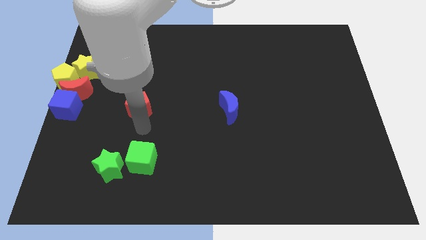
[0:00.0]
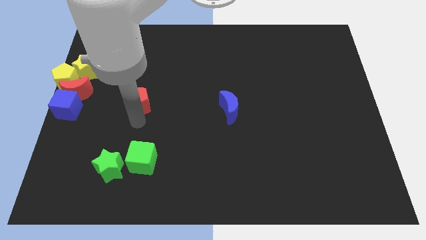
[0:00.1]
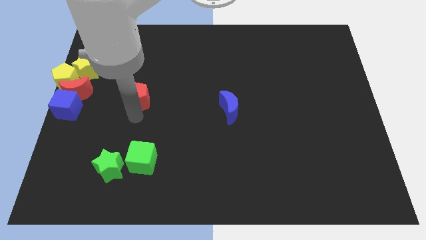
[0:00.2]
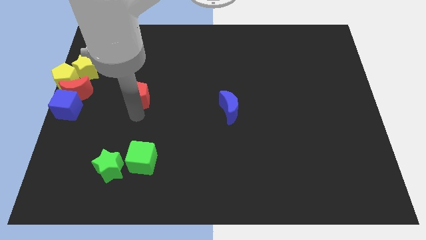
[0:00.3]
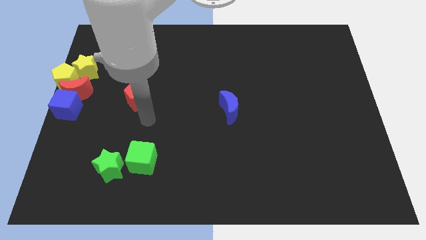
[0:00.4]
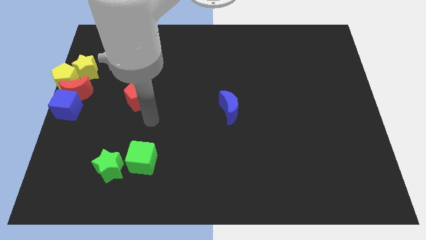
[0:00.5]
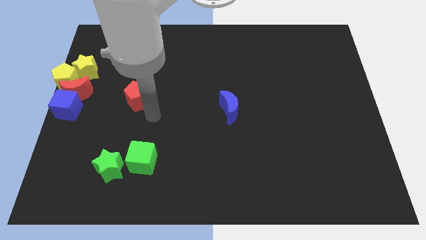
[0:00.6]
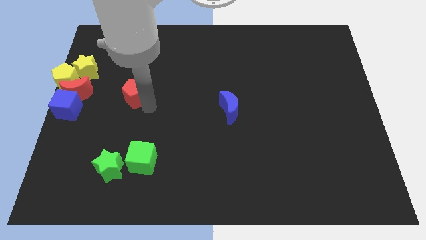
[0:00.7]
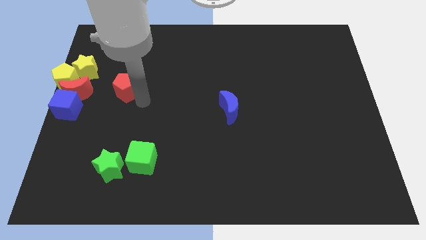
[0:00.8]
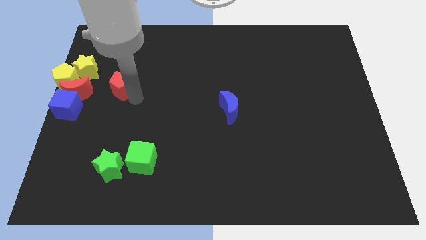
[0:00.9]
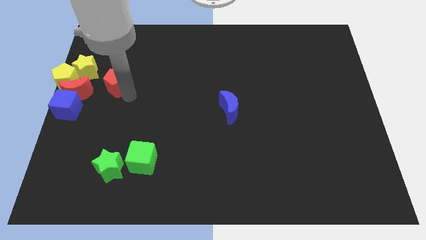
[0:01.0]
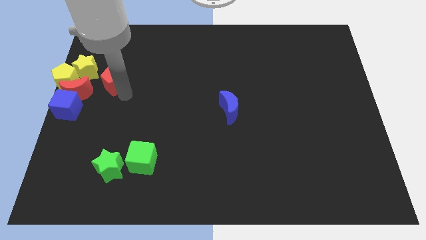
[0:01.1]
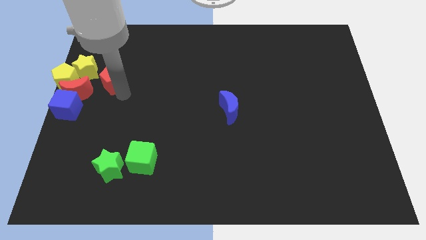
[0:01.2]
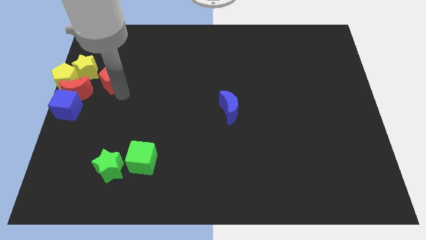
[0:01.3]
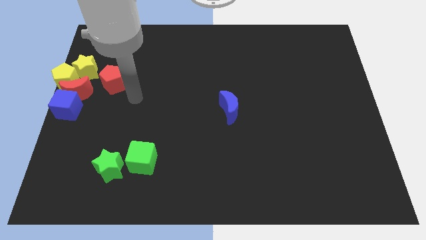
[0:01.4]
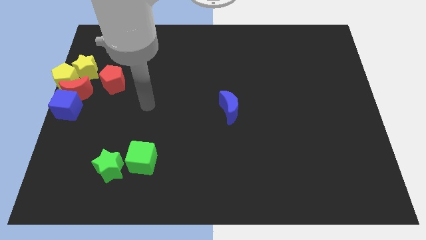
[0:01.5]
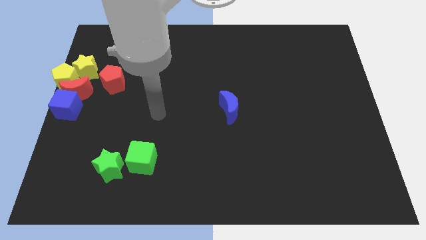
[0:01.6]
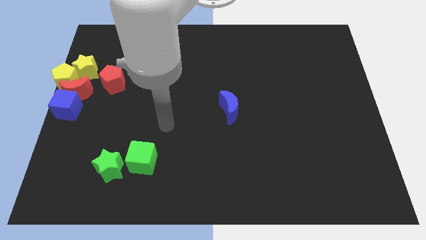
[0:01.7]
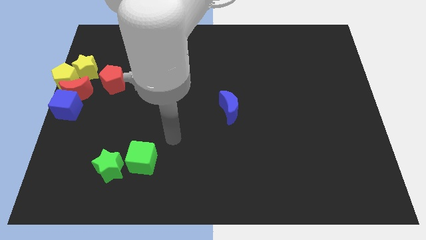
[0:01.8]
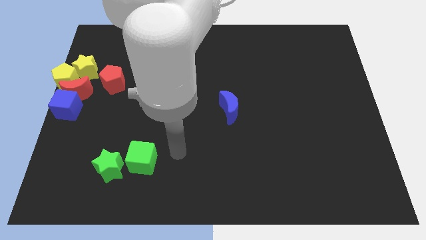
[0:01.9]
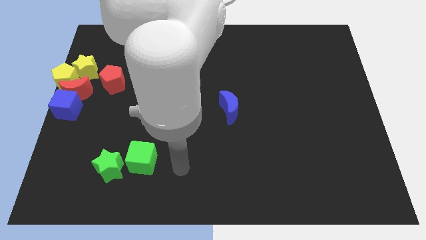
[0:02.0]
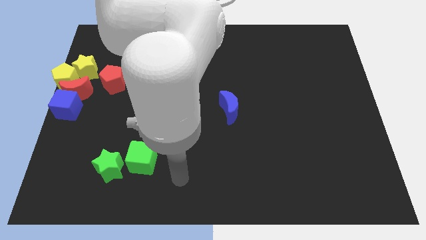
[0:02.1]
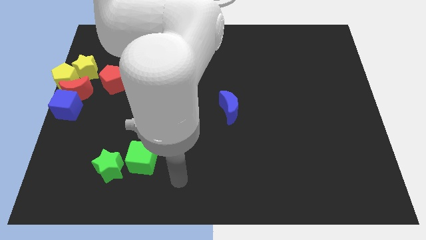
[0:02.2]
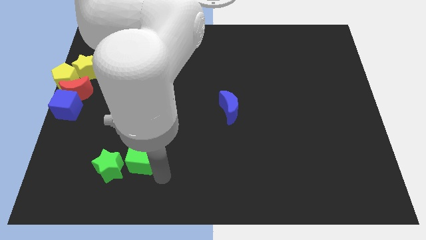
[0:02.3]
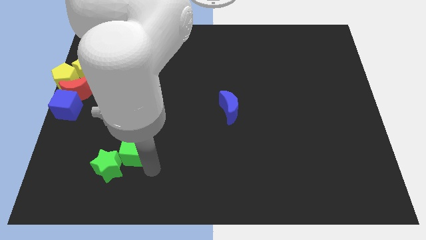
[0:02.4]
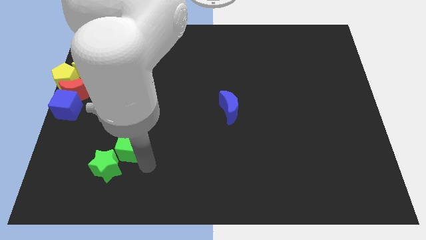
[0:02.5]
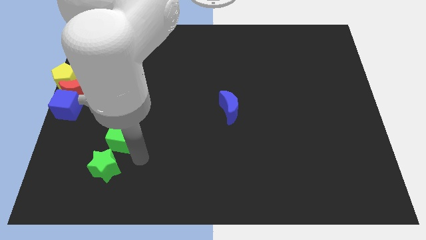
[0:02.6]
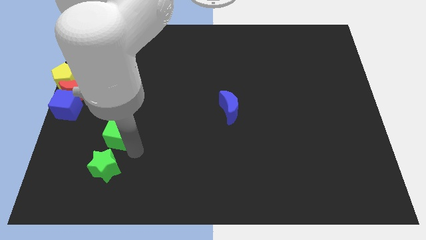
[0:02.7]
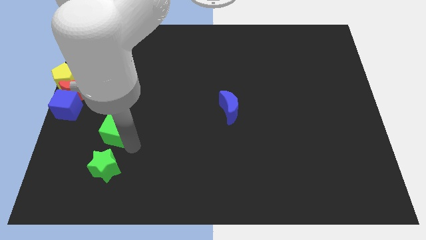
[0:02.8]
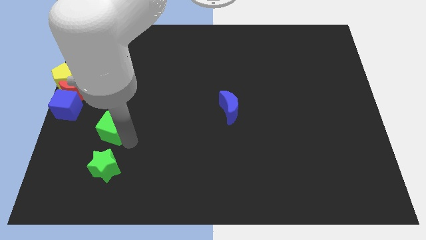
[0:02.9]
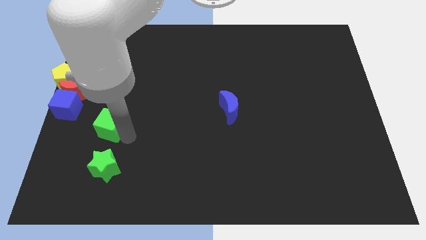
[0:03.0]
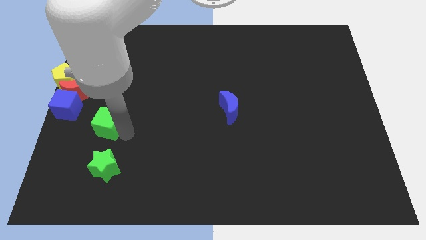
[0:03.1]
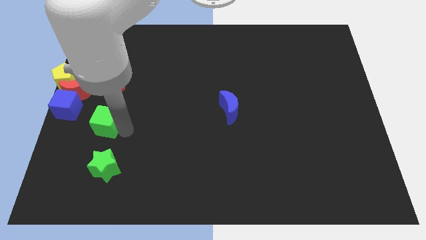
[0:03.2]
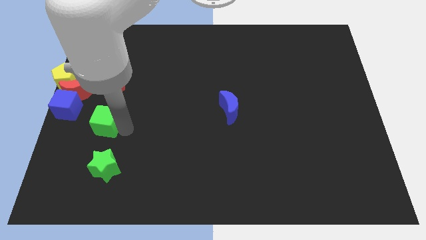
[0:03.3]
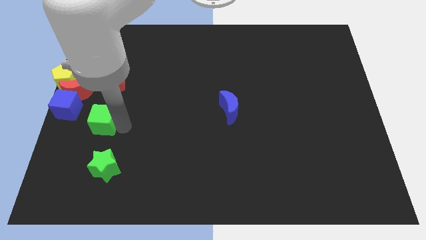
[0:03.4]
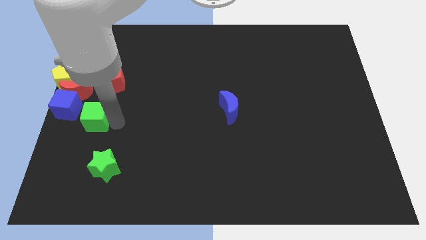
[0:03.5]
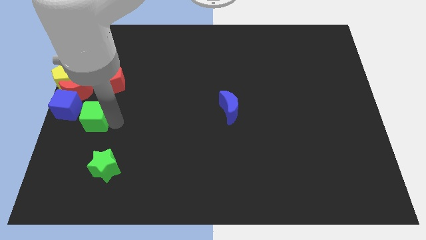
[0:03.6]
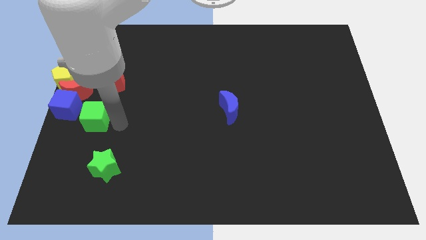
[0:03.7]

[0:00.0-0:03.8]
push the green cube towards the blue cube

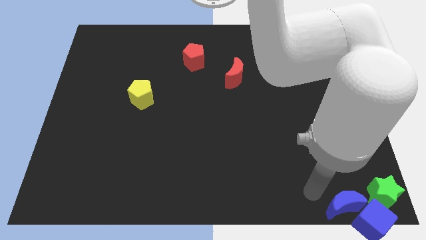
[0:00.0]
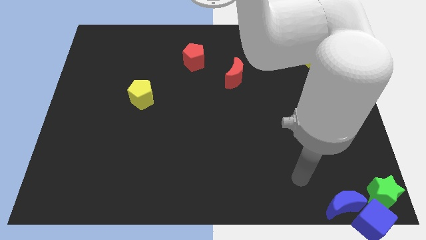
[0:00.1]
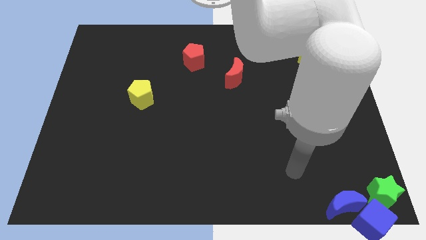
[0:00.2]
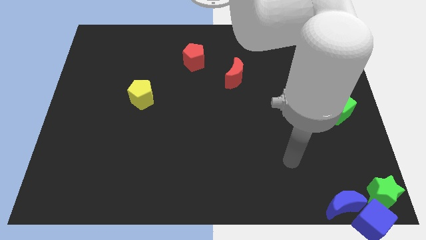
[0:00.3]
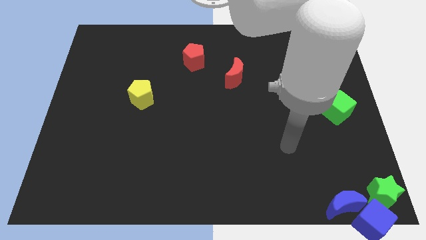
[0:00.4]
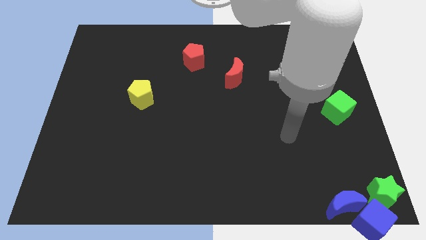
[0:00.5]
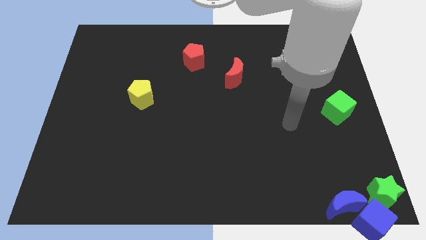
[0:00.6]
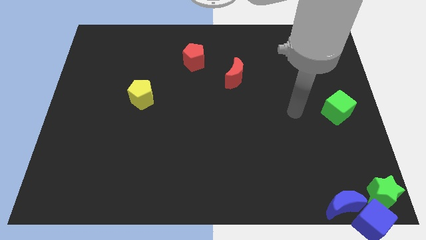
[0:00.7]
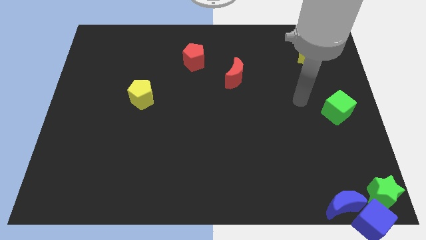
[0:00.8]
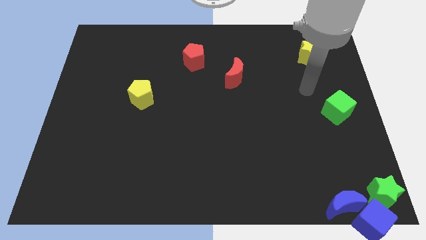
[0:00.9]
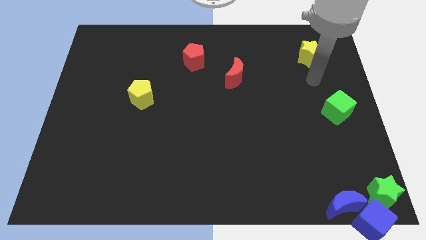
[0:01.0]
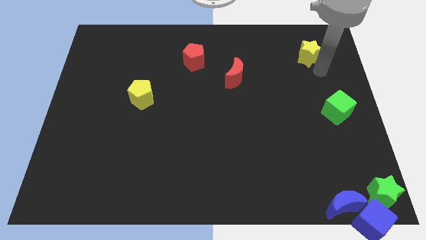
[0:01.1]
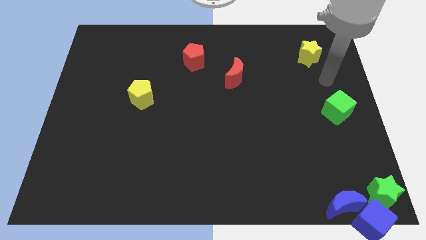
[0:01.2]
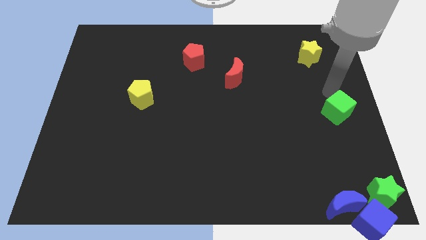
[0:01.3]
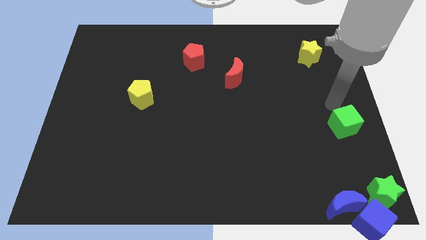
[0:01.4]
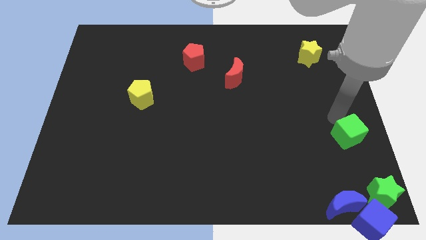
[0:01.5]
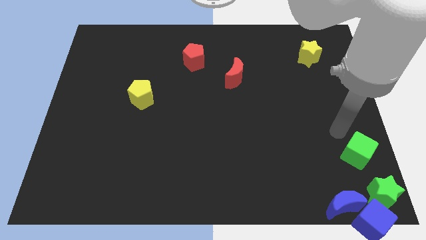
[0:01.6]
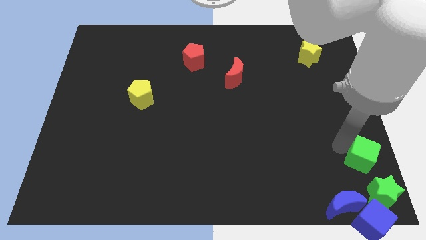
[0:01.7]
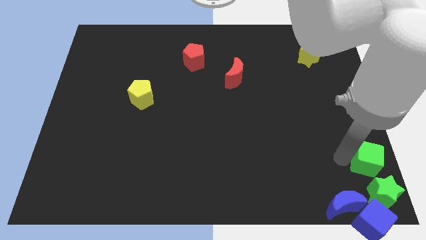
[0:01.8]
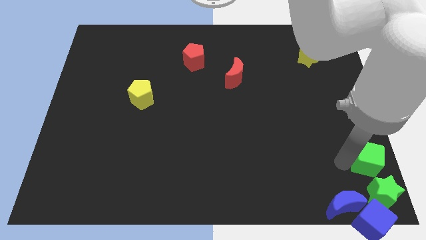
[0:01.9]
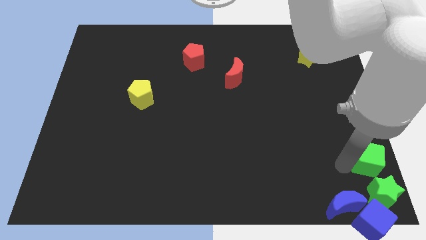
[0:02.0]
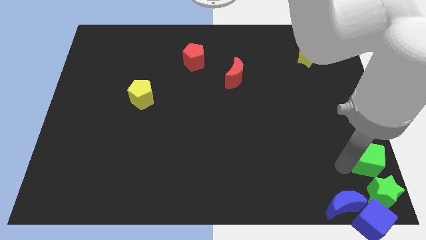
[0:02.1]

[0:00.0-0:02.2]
place the green cube above the green star

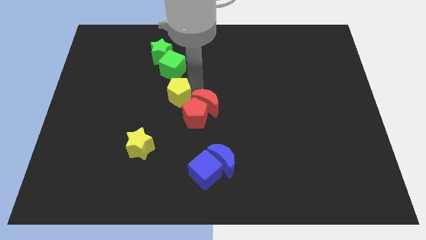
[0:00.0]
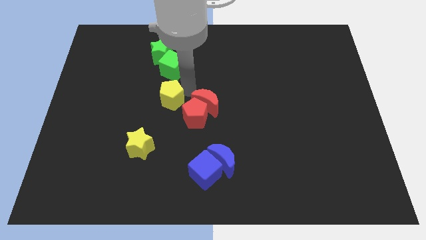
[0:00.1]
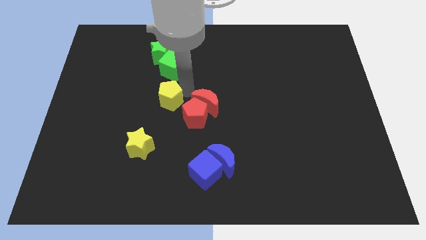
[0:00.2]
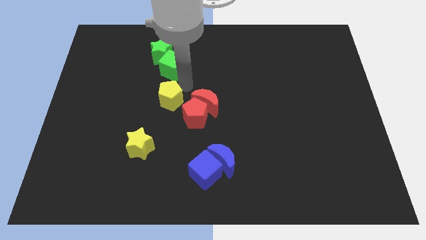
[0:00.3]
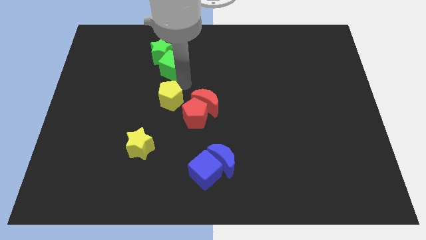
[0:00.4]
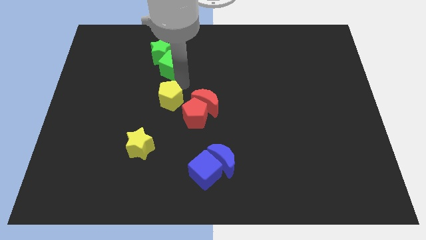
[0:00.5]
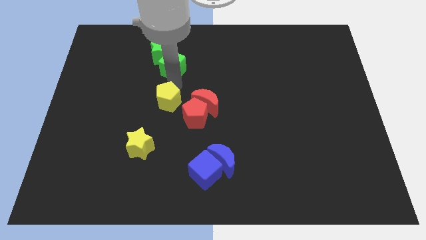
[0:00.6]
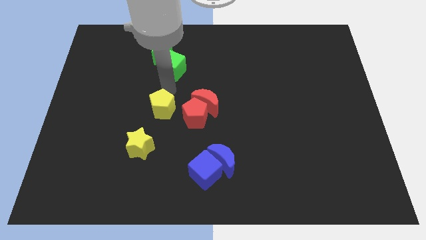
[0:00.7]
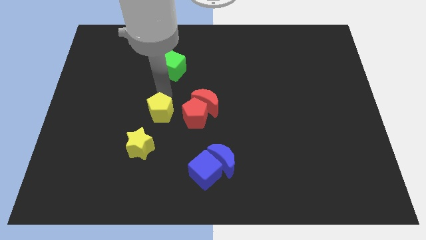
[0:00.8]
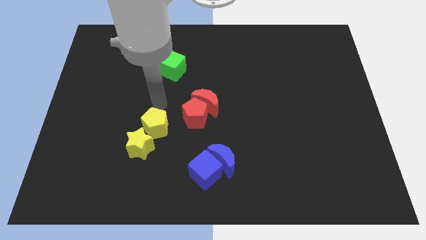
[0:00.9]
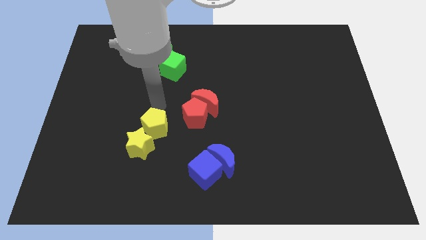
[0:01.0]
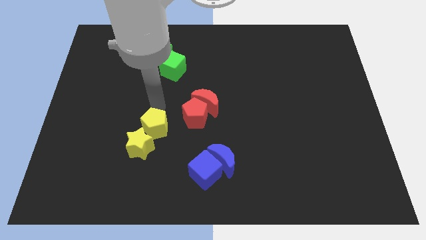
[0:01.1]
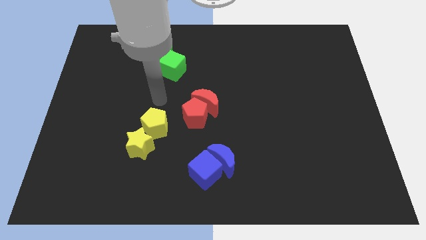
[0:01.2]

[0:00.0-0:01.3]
adjust the yellow pentagon on the top right of the yellow star

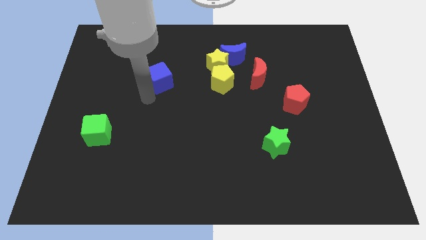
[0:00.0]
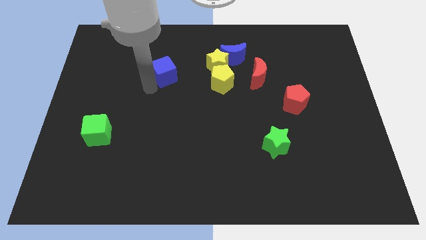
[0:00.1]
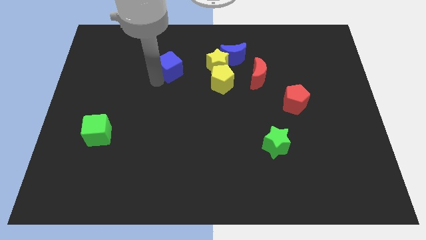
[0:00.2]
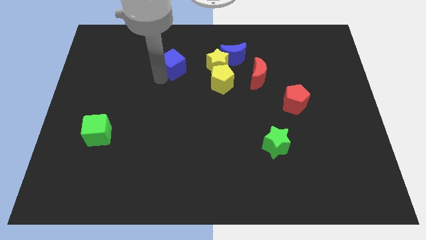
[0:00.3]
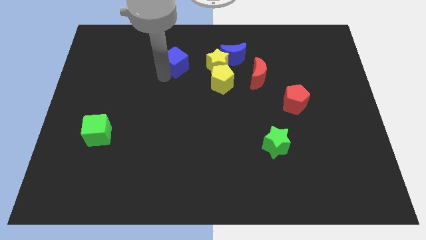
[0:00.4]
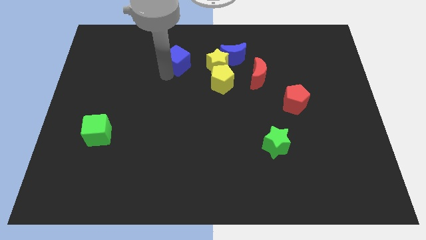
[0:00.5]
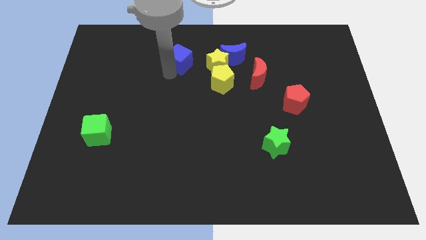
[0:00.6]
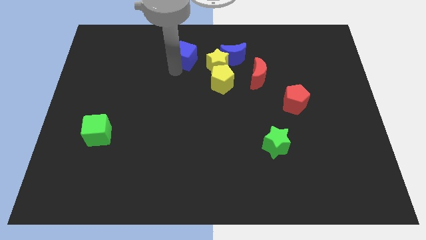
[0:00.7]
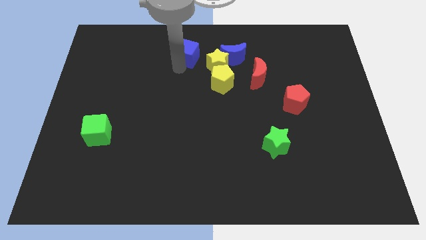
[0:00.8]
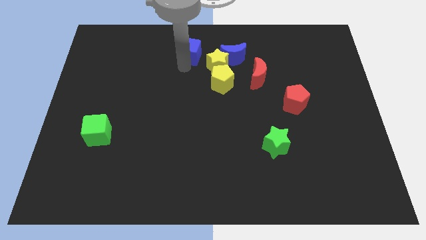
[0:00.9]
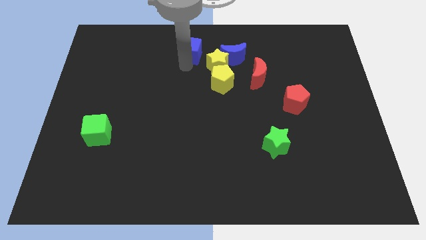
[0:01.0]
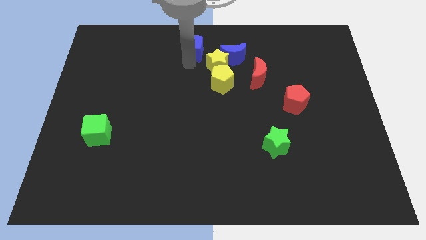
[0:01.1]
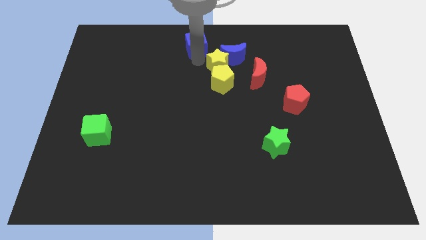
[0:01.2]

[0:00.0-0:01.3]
move the blue cube at the top left side of the yellow star

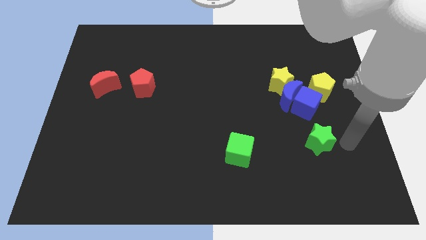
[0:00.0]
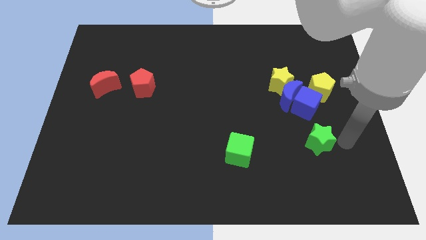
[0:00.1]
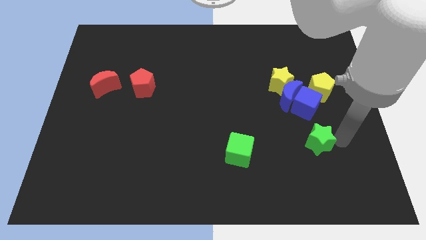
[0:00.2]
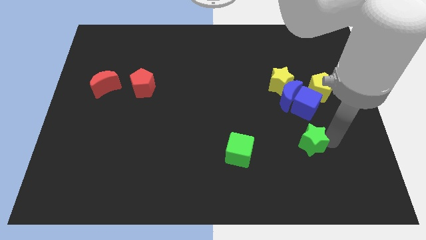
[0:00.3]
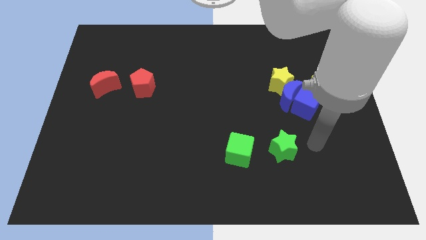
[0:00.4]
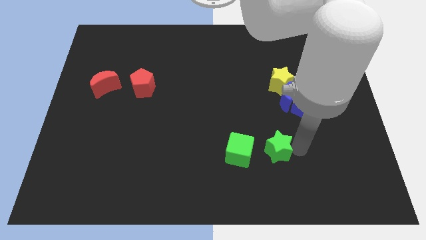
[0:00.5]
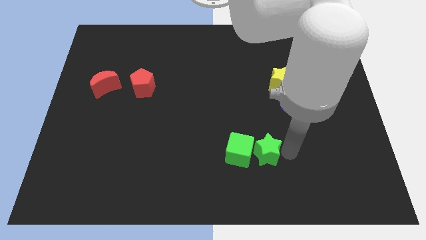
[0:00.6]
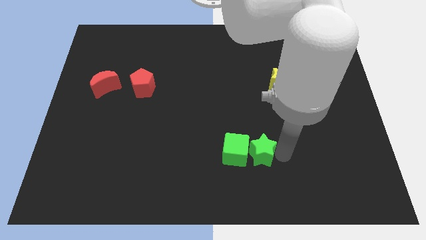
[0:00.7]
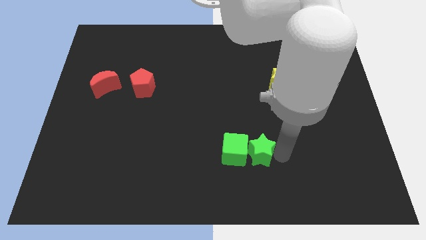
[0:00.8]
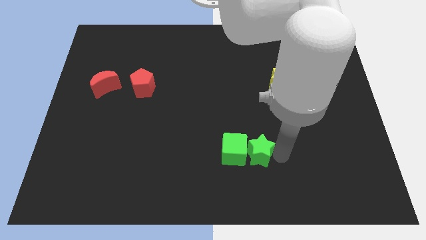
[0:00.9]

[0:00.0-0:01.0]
place the green star right to the green cube
